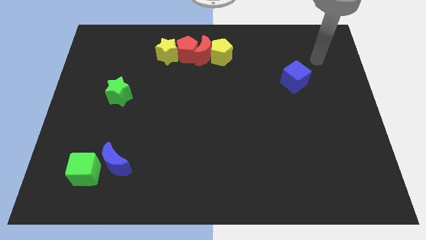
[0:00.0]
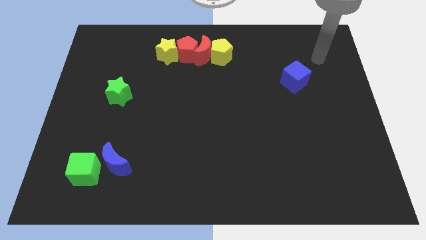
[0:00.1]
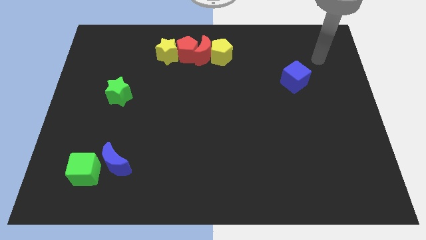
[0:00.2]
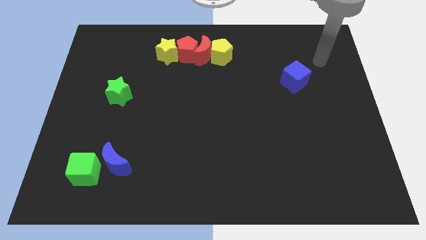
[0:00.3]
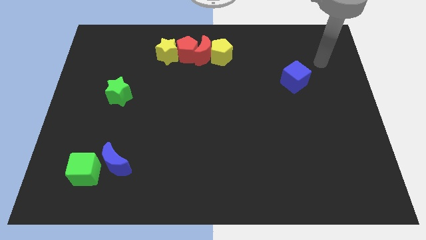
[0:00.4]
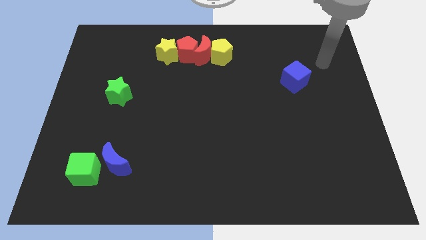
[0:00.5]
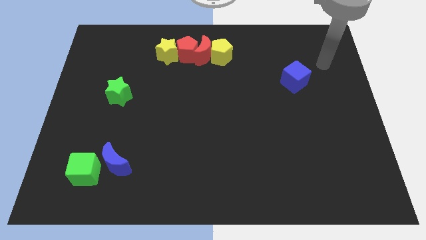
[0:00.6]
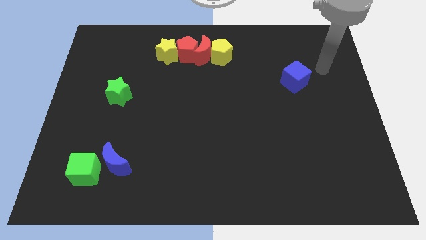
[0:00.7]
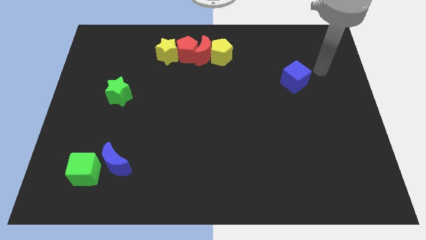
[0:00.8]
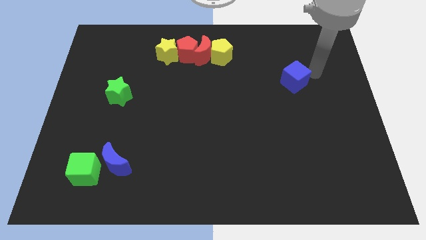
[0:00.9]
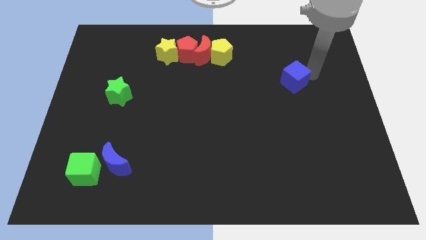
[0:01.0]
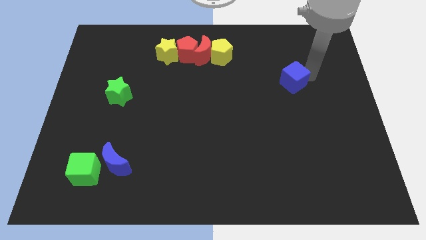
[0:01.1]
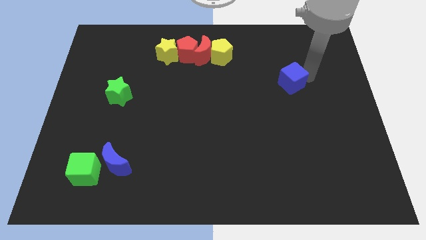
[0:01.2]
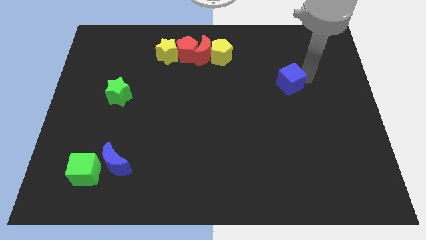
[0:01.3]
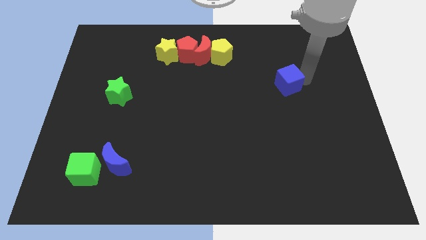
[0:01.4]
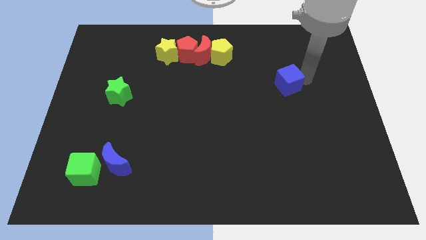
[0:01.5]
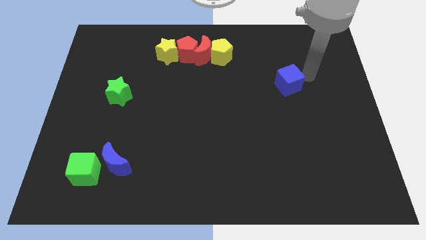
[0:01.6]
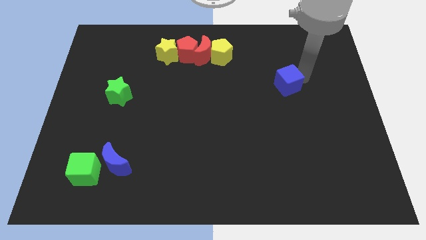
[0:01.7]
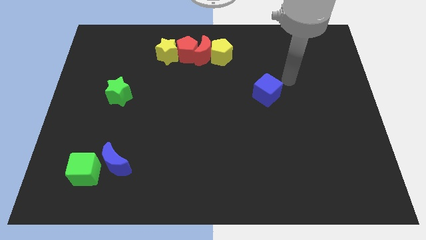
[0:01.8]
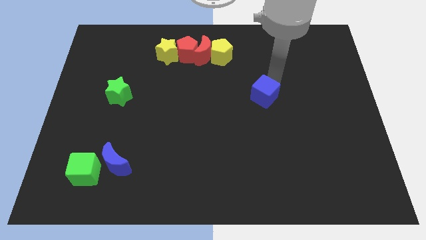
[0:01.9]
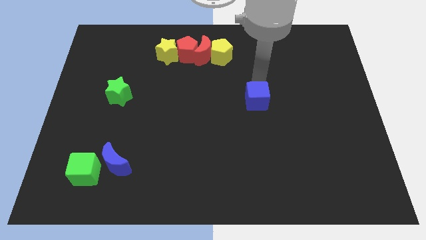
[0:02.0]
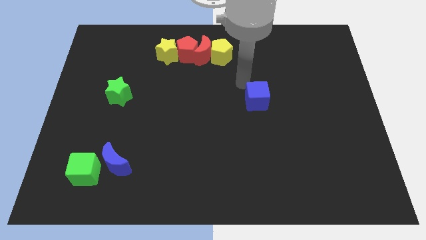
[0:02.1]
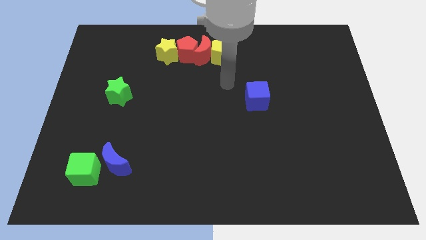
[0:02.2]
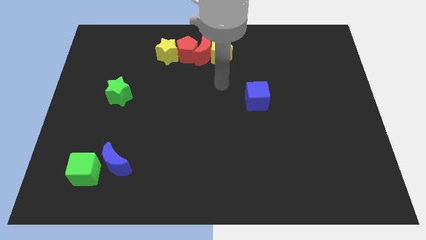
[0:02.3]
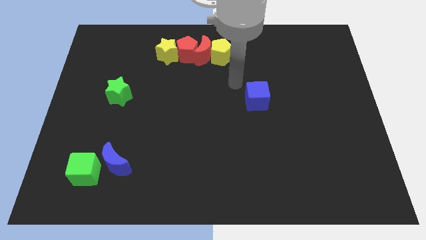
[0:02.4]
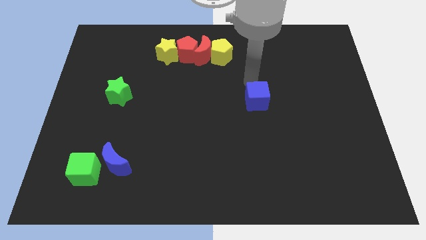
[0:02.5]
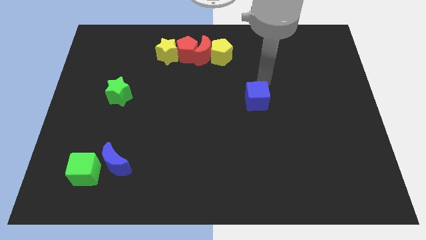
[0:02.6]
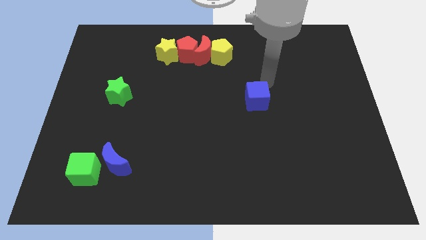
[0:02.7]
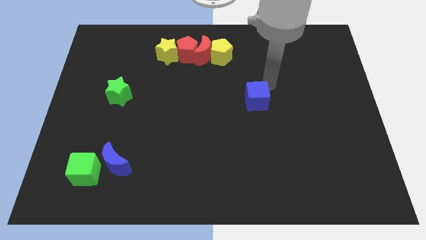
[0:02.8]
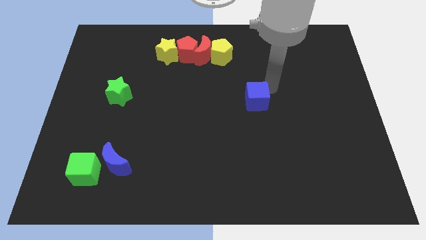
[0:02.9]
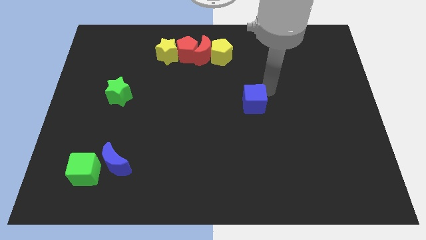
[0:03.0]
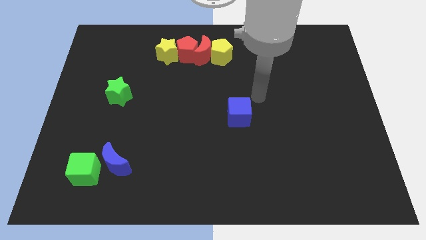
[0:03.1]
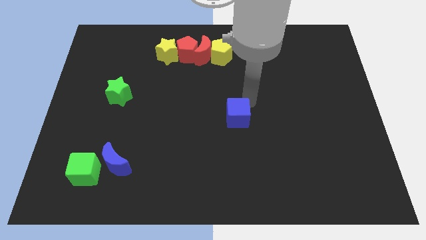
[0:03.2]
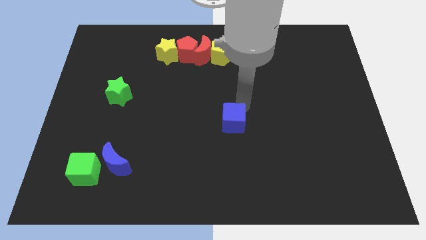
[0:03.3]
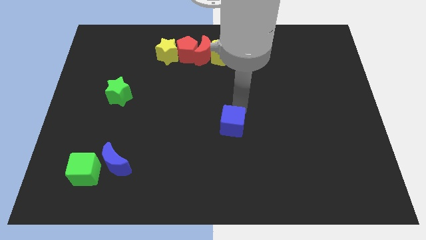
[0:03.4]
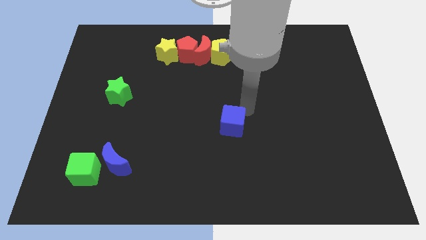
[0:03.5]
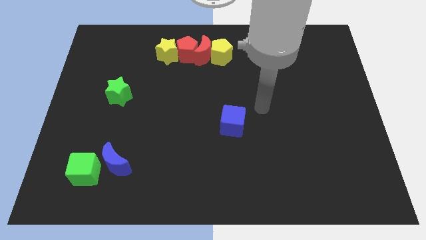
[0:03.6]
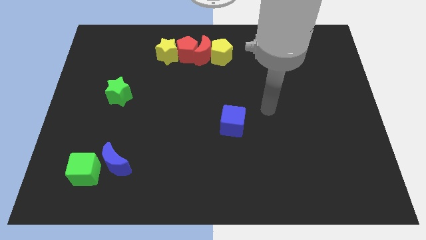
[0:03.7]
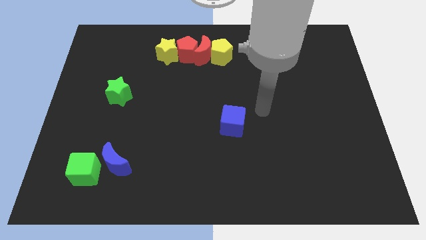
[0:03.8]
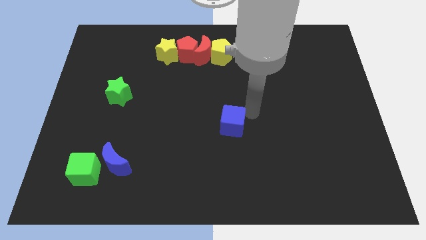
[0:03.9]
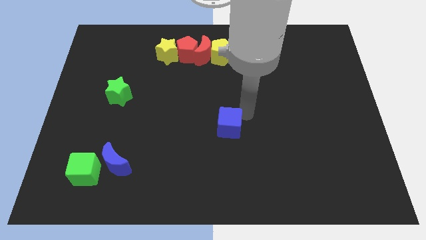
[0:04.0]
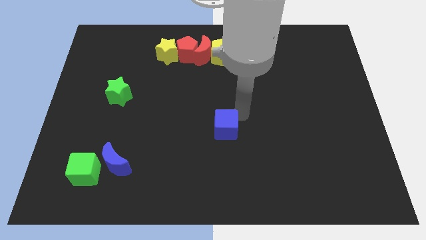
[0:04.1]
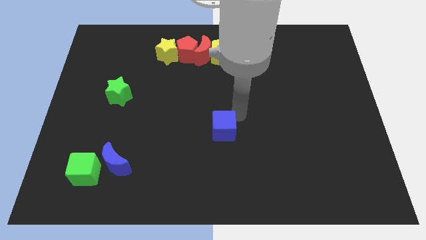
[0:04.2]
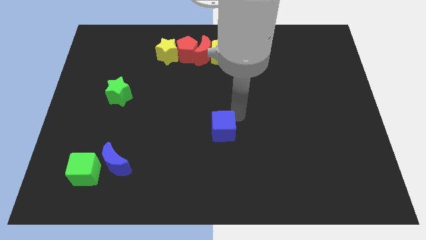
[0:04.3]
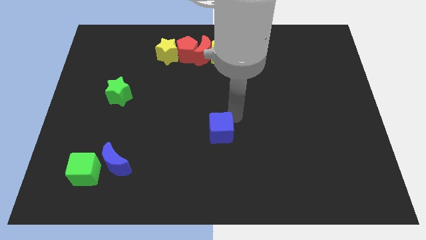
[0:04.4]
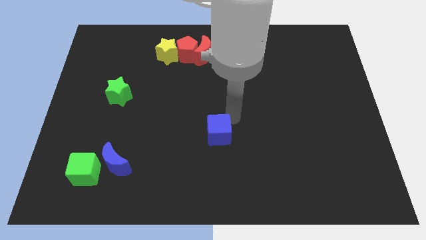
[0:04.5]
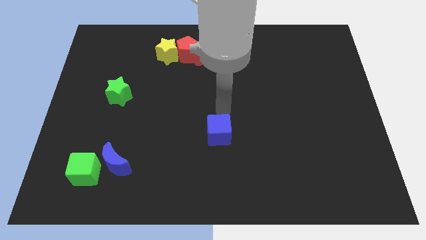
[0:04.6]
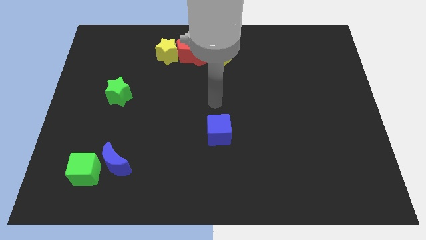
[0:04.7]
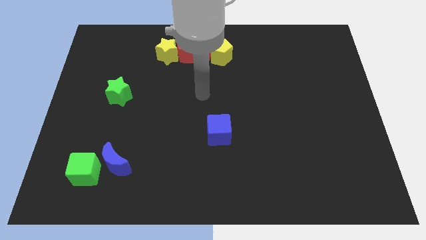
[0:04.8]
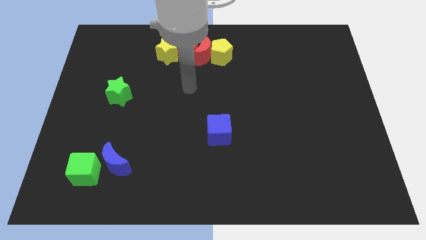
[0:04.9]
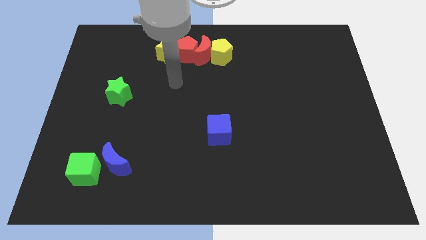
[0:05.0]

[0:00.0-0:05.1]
slide blue cube down vertical to yellow pentagon

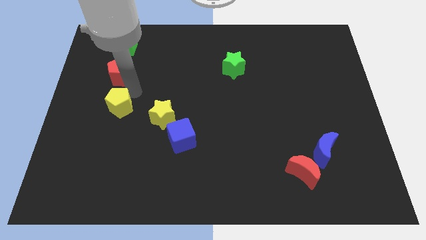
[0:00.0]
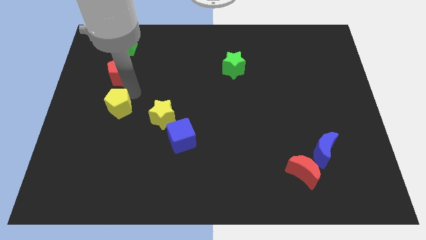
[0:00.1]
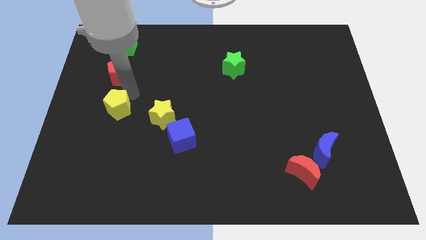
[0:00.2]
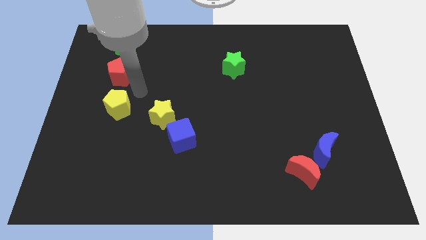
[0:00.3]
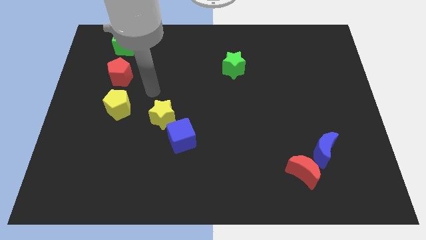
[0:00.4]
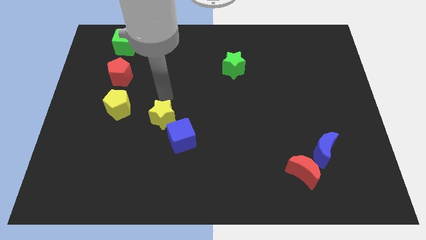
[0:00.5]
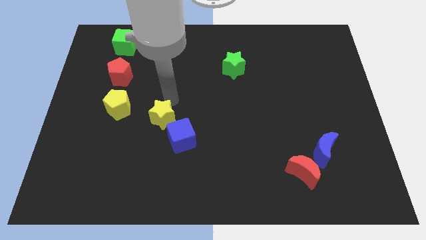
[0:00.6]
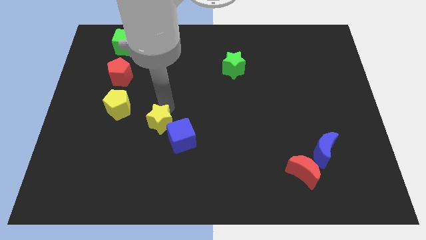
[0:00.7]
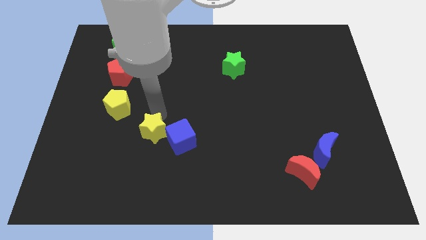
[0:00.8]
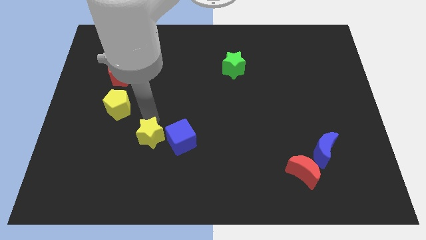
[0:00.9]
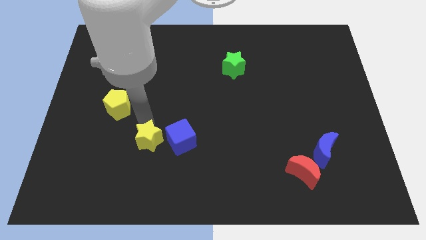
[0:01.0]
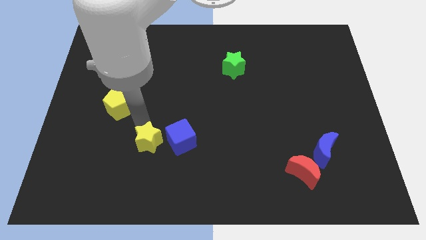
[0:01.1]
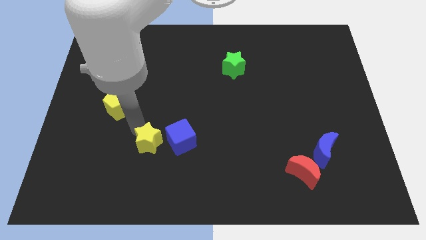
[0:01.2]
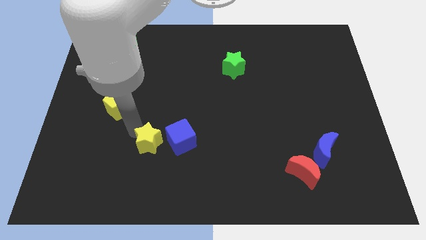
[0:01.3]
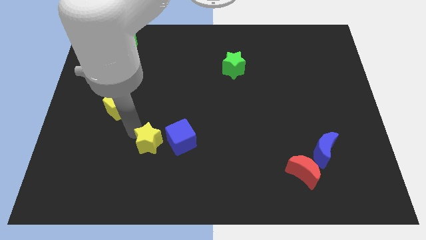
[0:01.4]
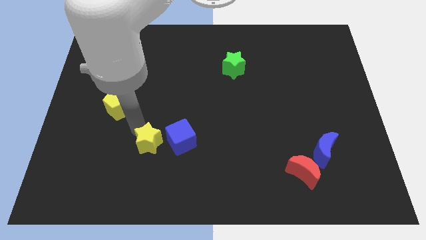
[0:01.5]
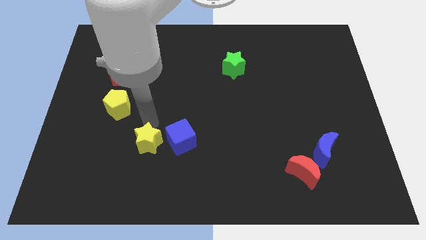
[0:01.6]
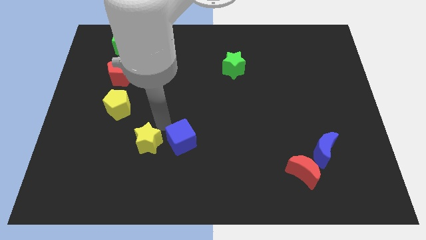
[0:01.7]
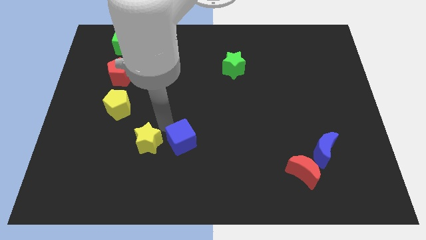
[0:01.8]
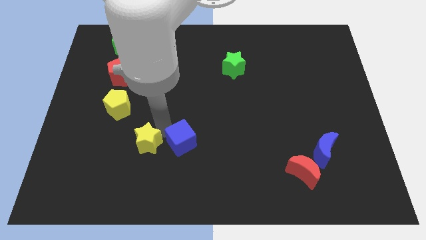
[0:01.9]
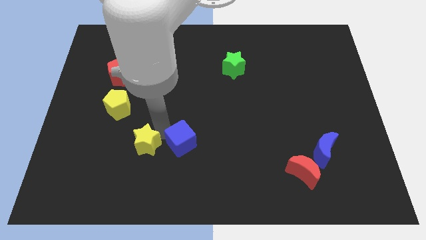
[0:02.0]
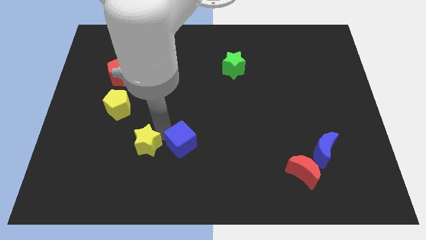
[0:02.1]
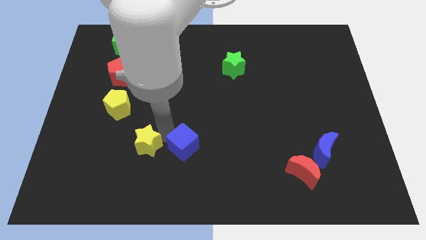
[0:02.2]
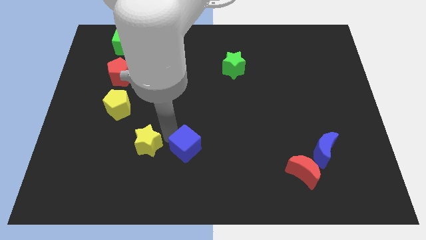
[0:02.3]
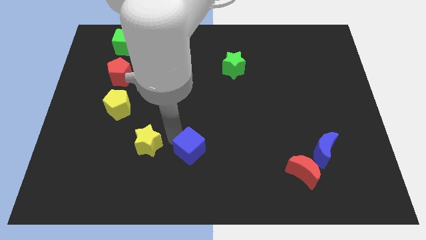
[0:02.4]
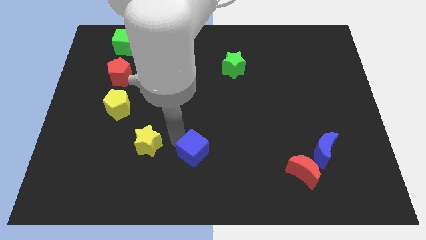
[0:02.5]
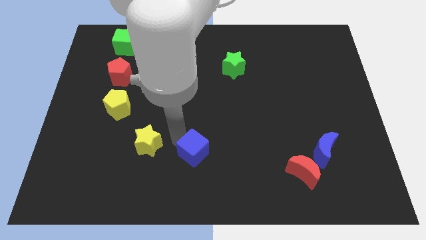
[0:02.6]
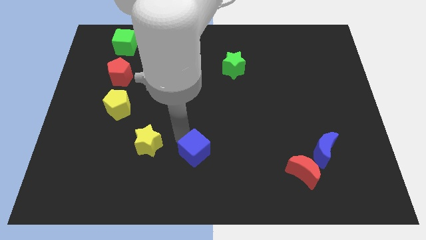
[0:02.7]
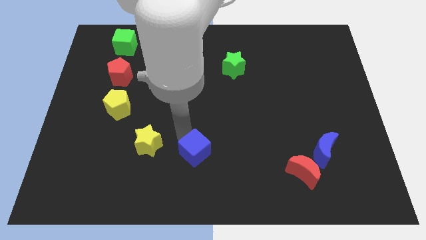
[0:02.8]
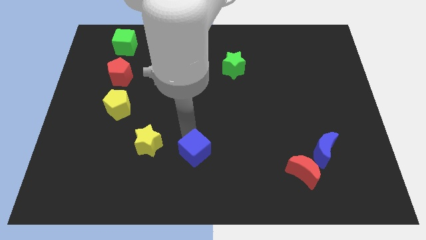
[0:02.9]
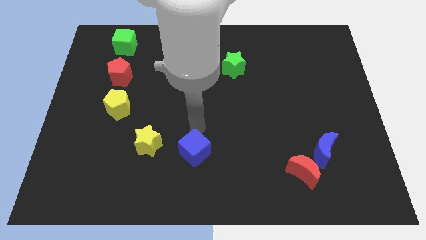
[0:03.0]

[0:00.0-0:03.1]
separate blue cube from yellow star

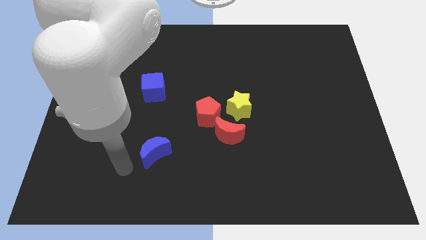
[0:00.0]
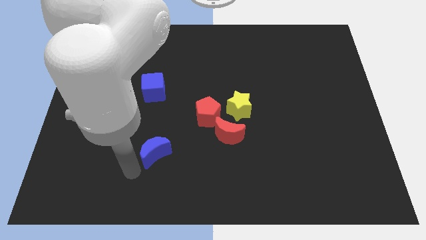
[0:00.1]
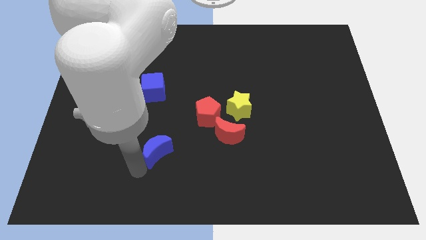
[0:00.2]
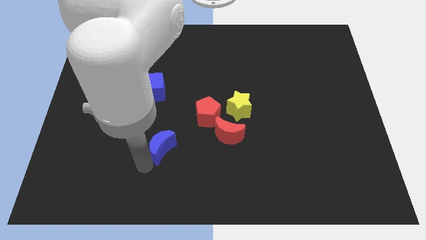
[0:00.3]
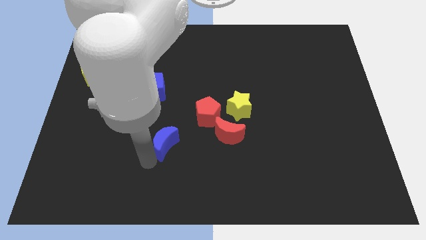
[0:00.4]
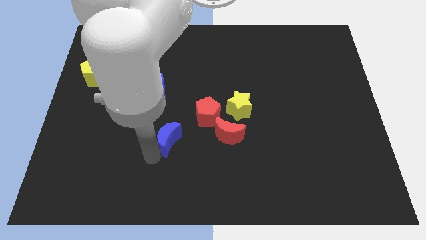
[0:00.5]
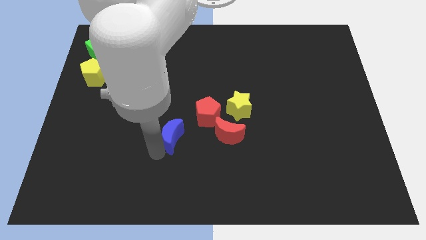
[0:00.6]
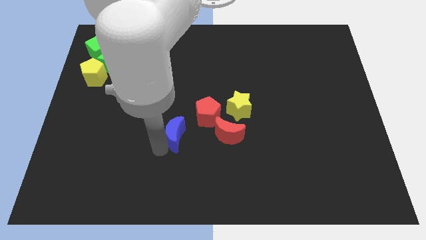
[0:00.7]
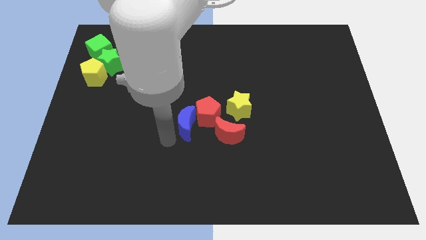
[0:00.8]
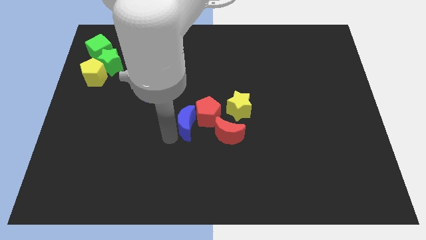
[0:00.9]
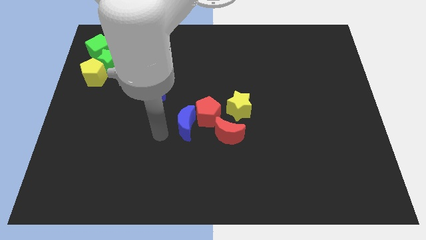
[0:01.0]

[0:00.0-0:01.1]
place the blue crescent into the left of the red pentagon
